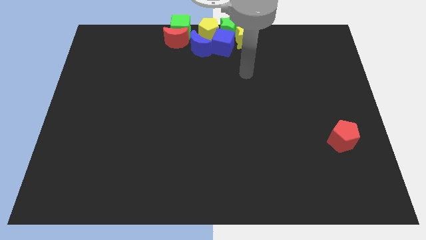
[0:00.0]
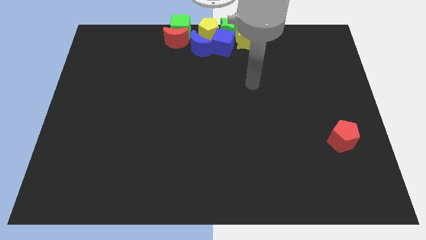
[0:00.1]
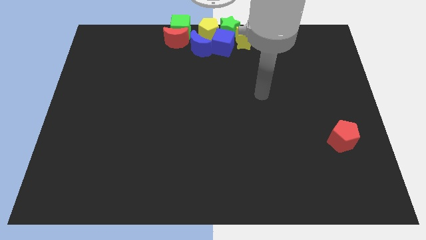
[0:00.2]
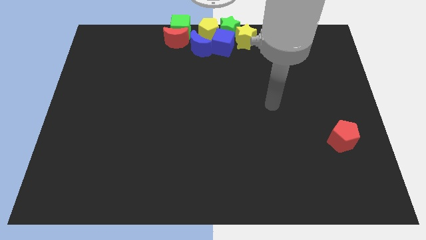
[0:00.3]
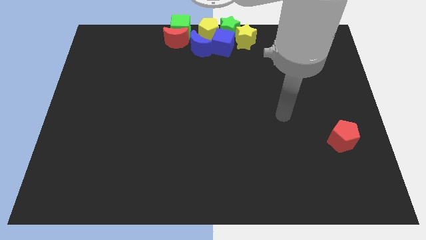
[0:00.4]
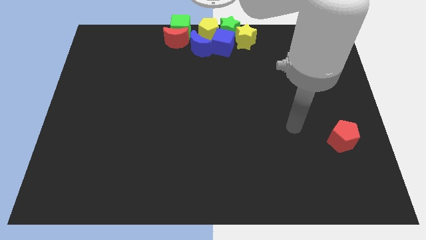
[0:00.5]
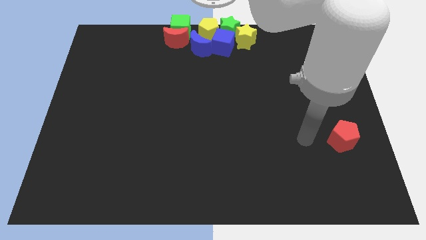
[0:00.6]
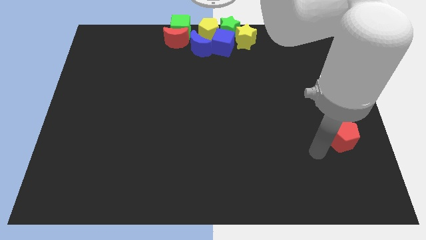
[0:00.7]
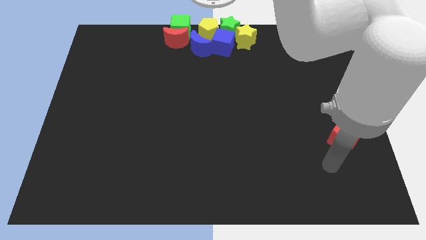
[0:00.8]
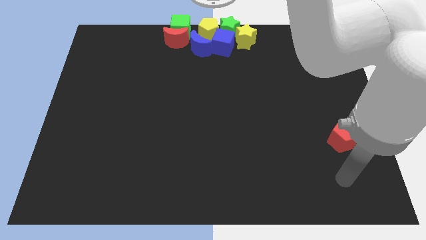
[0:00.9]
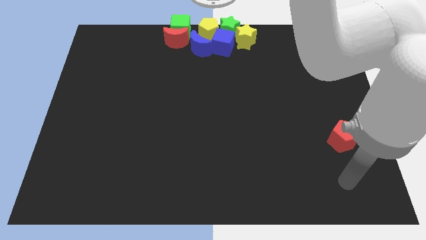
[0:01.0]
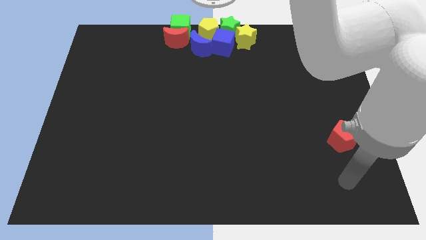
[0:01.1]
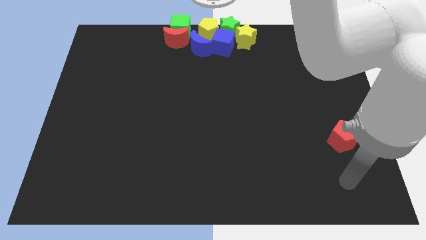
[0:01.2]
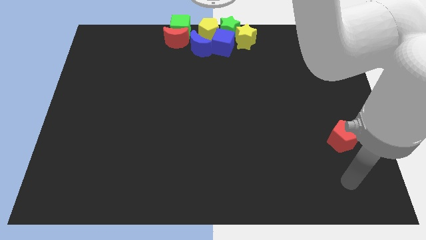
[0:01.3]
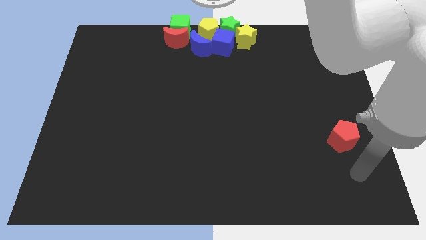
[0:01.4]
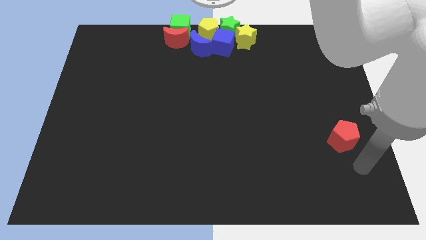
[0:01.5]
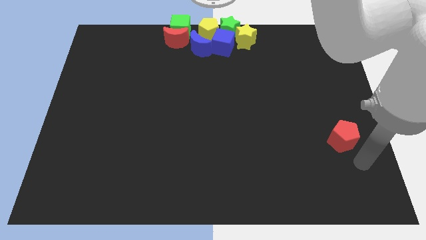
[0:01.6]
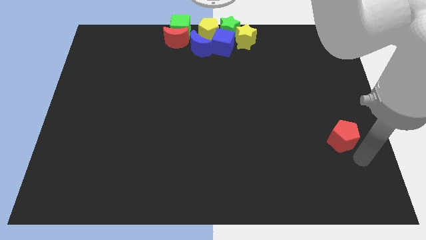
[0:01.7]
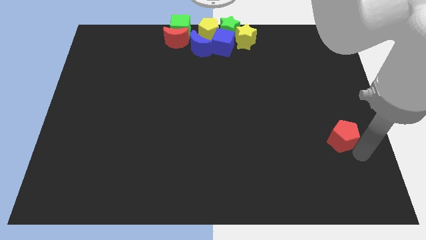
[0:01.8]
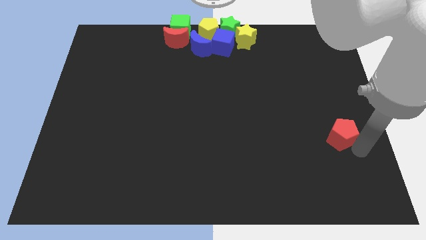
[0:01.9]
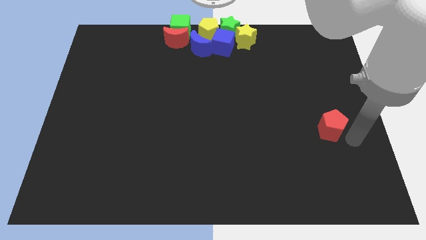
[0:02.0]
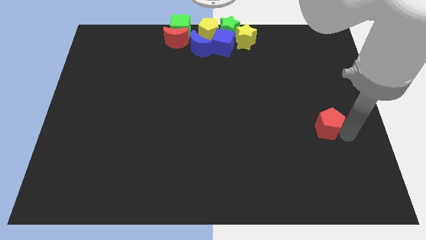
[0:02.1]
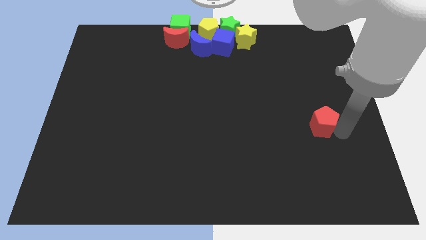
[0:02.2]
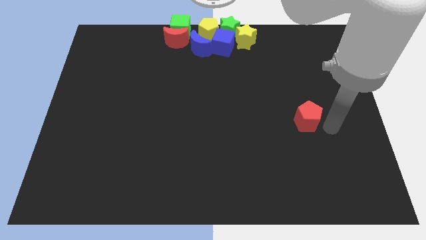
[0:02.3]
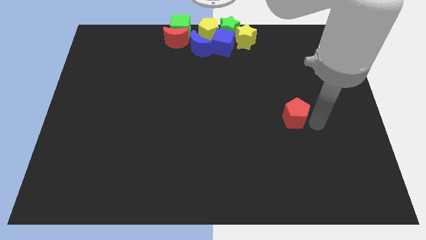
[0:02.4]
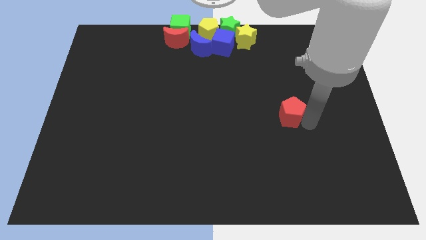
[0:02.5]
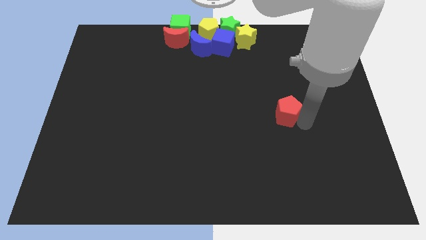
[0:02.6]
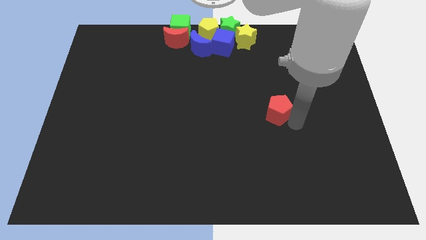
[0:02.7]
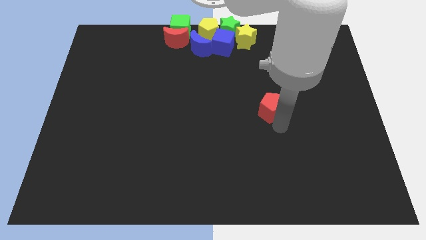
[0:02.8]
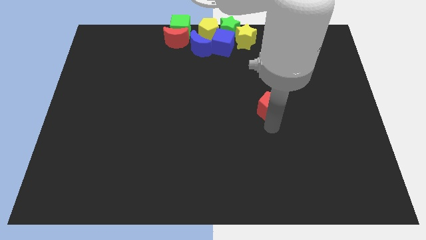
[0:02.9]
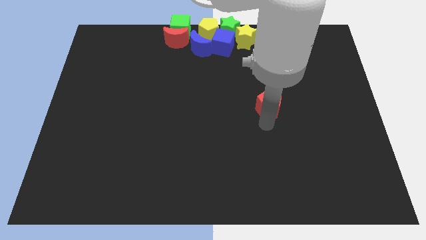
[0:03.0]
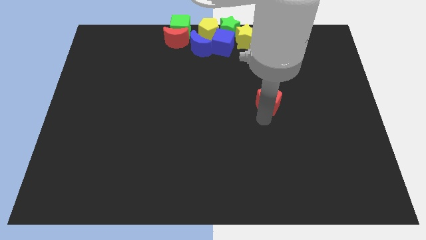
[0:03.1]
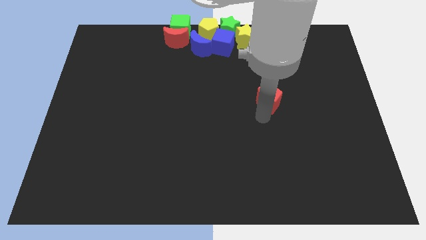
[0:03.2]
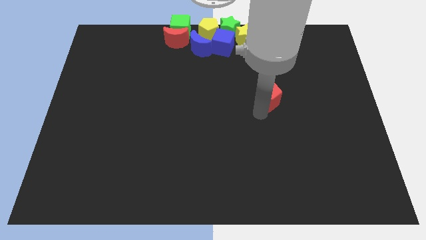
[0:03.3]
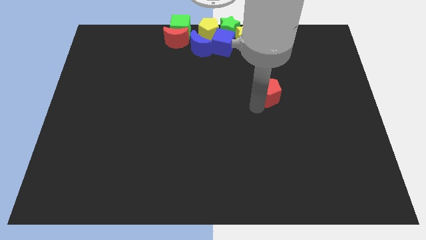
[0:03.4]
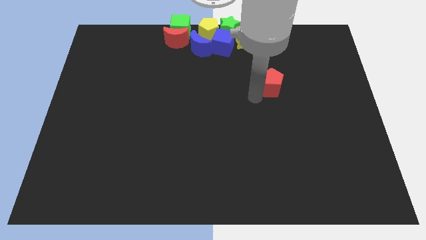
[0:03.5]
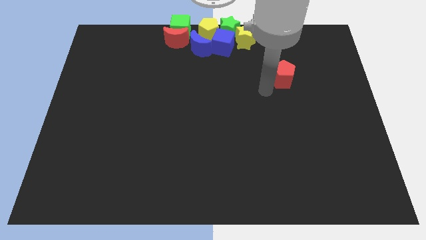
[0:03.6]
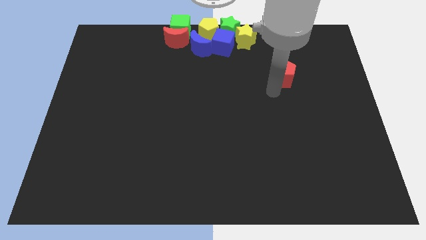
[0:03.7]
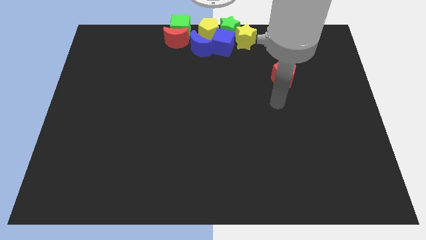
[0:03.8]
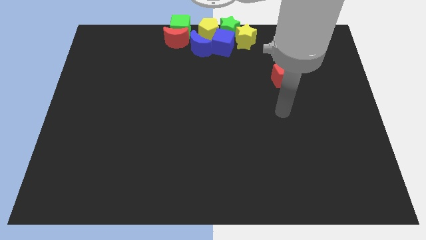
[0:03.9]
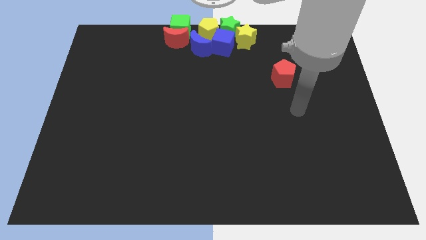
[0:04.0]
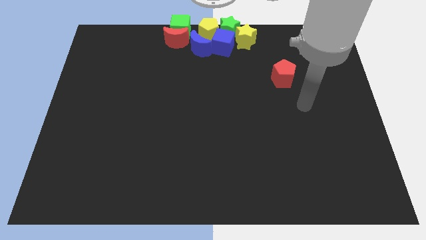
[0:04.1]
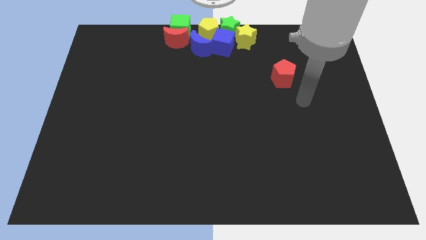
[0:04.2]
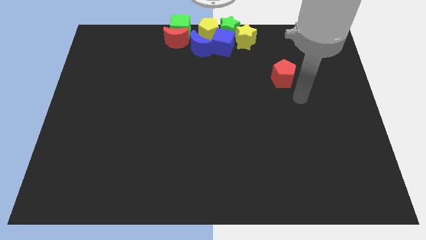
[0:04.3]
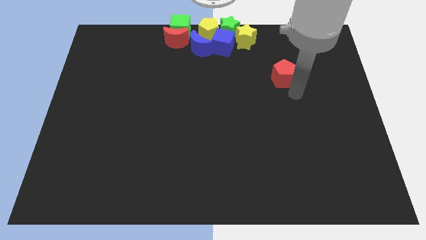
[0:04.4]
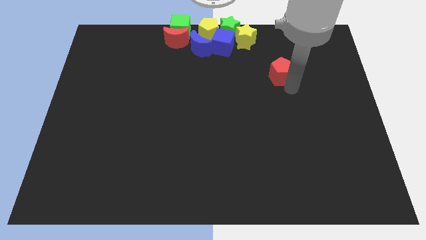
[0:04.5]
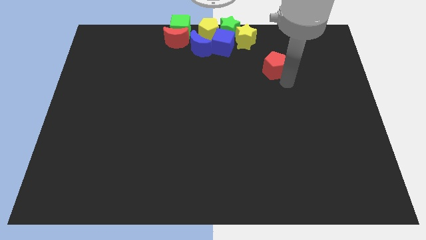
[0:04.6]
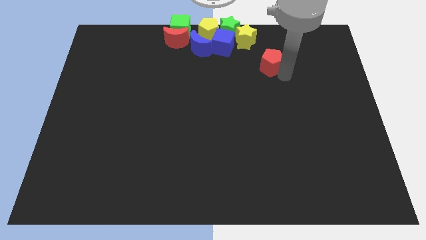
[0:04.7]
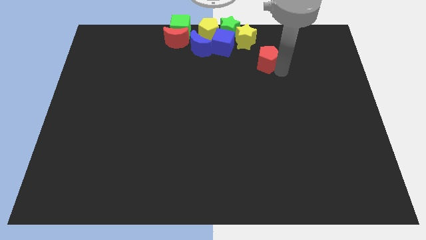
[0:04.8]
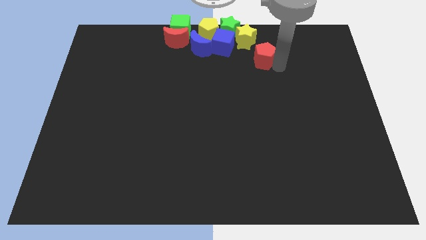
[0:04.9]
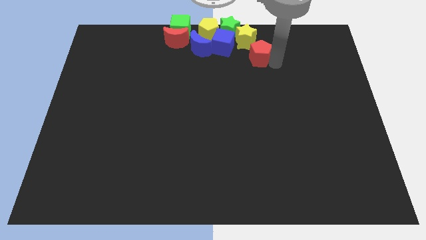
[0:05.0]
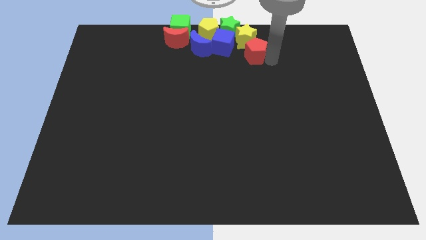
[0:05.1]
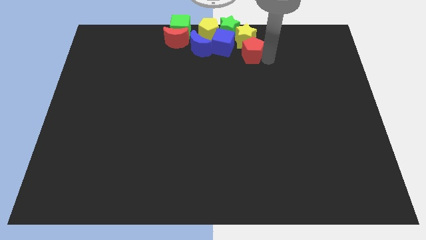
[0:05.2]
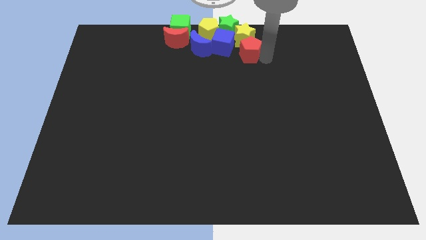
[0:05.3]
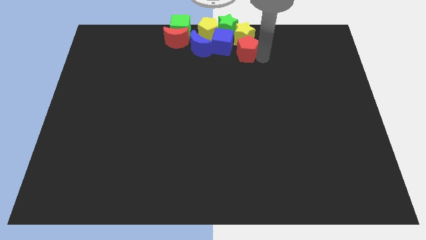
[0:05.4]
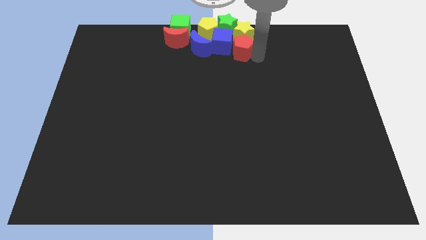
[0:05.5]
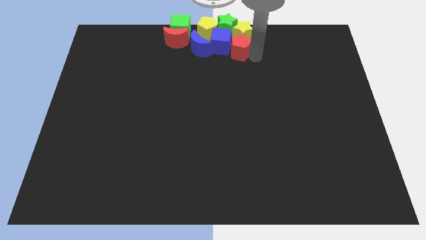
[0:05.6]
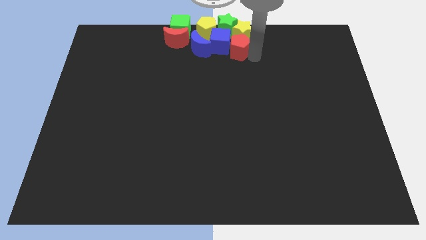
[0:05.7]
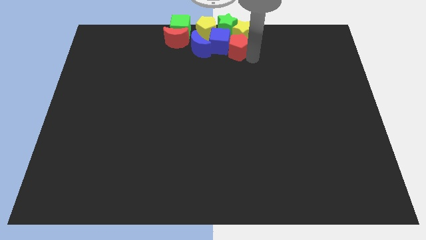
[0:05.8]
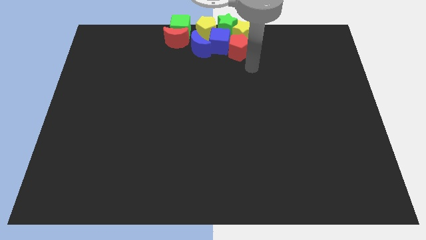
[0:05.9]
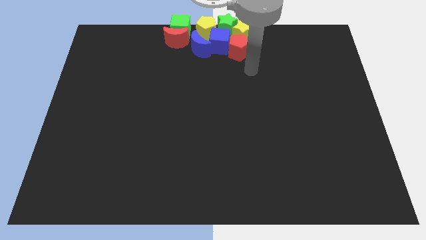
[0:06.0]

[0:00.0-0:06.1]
move red pentagon towards top

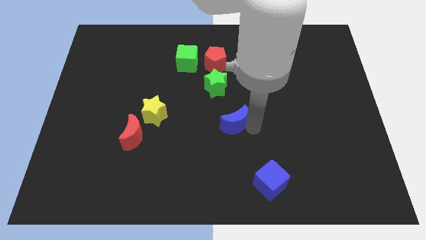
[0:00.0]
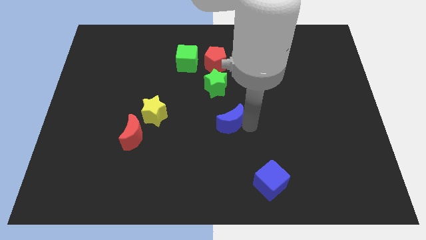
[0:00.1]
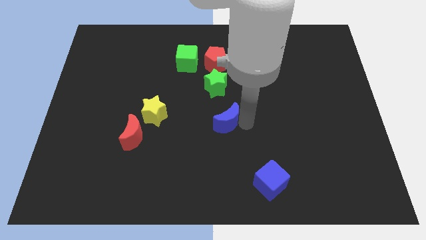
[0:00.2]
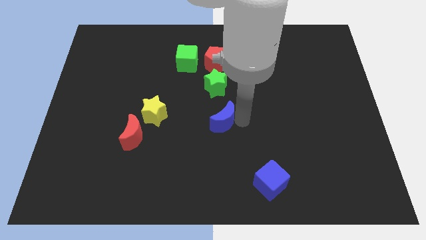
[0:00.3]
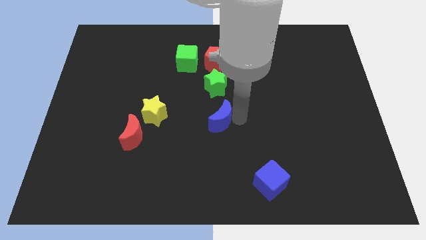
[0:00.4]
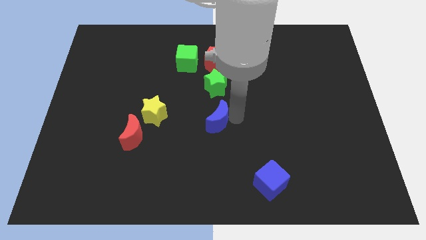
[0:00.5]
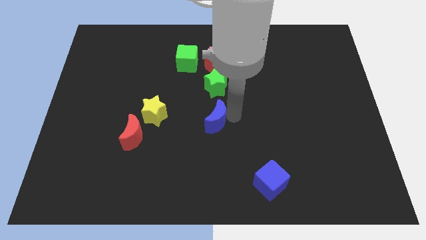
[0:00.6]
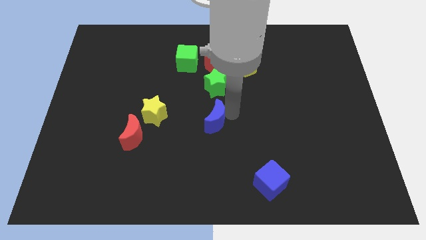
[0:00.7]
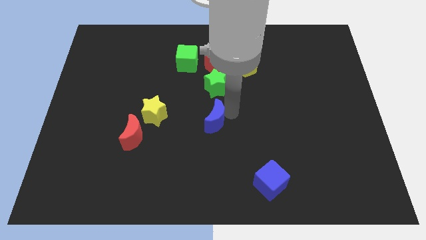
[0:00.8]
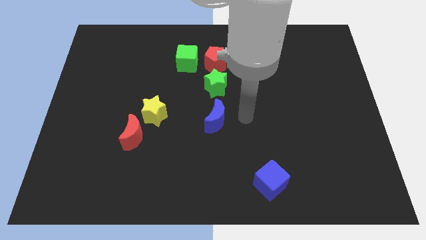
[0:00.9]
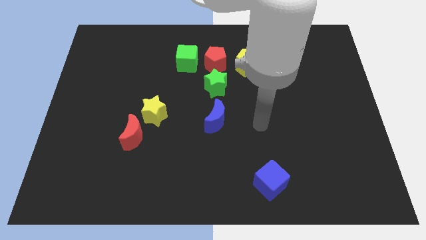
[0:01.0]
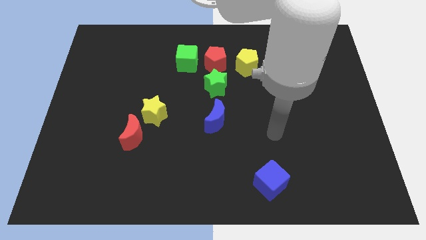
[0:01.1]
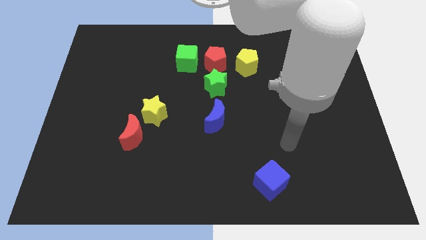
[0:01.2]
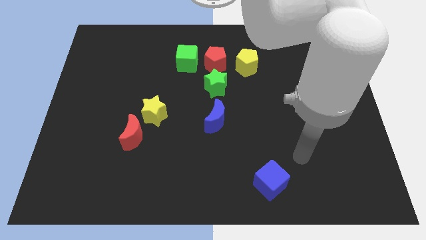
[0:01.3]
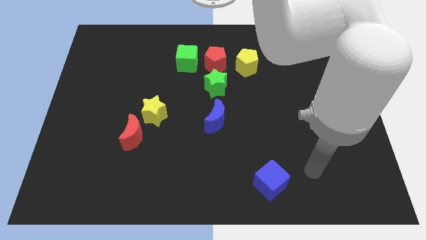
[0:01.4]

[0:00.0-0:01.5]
move blue crescent to the bottom of green star

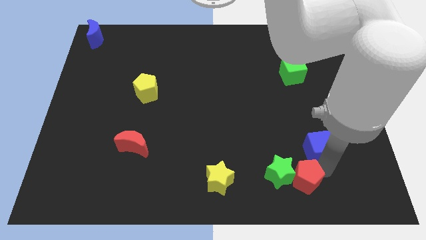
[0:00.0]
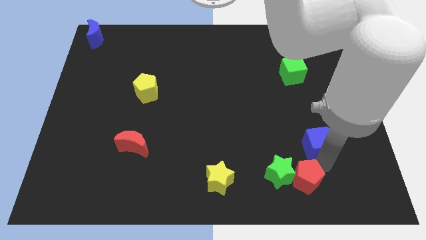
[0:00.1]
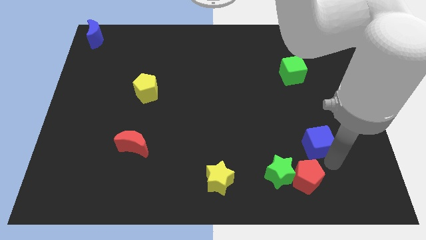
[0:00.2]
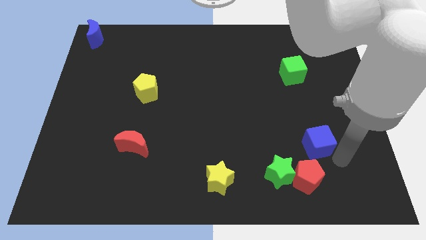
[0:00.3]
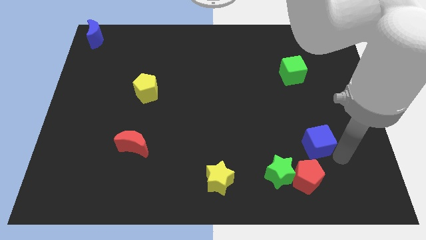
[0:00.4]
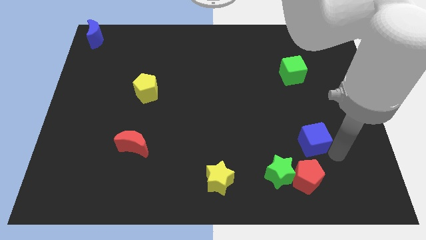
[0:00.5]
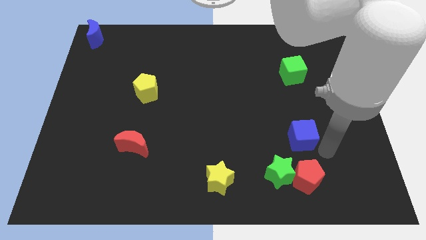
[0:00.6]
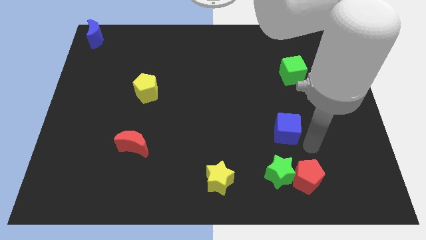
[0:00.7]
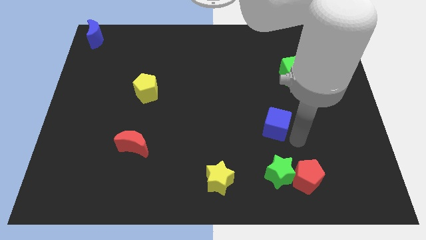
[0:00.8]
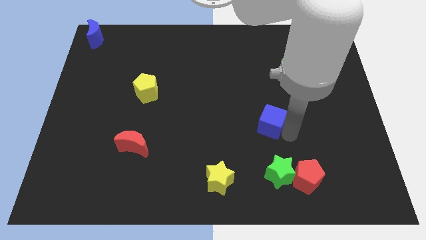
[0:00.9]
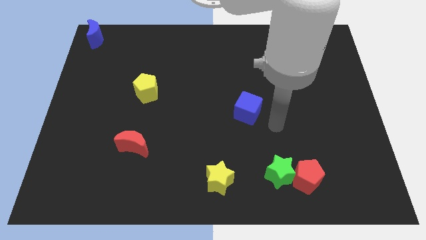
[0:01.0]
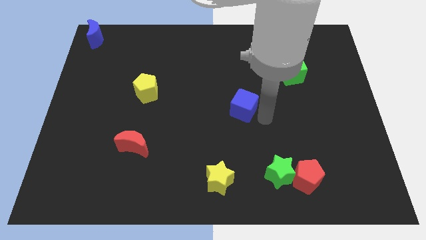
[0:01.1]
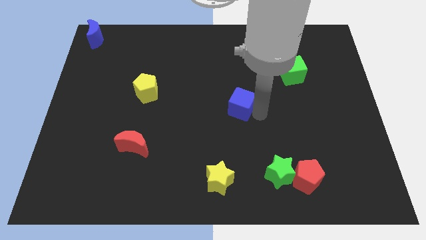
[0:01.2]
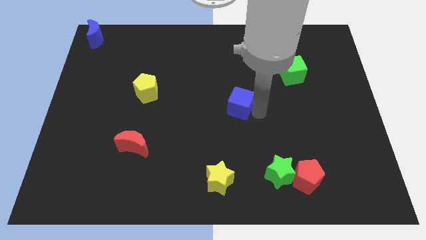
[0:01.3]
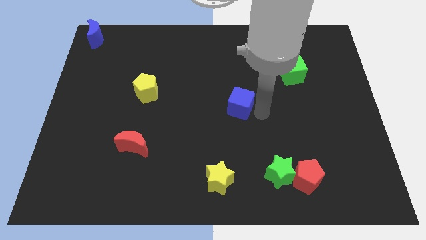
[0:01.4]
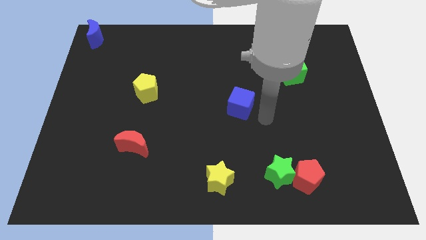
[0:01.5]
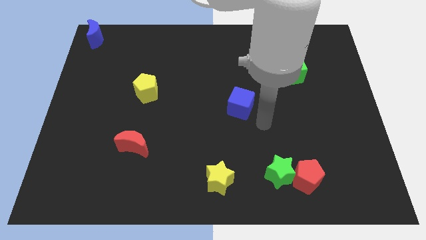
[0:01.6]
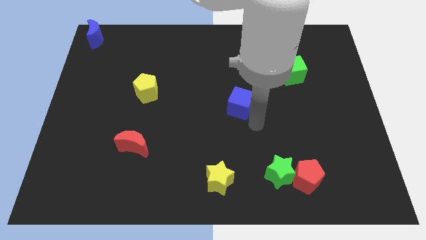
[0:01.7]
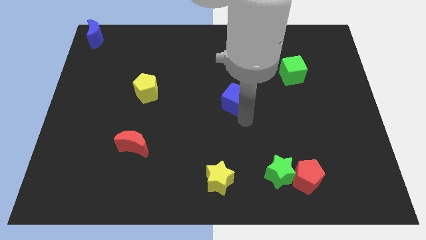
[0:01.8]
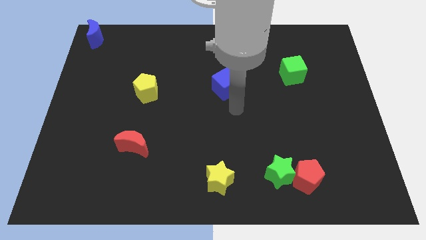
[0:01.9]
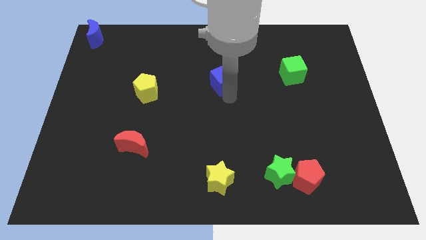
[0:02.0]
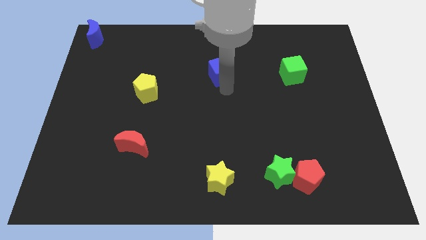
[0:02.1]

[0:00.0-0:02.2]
move the blue cube vertical above yellow star
